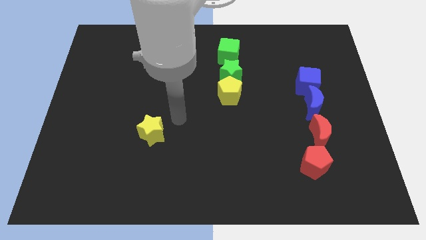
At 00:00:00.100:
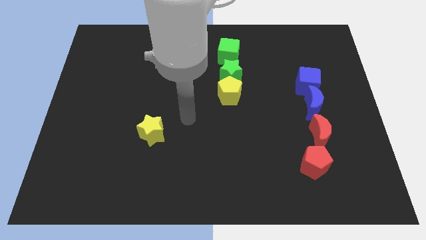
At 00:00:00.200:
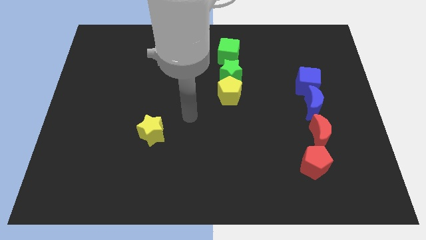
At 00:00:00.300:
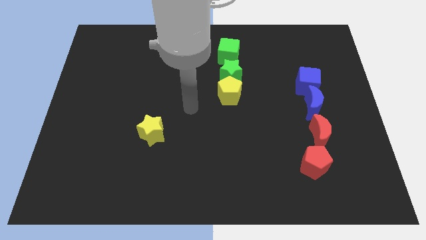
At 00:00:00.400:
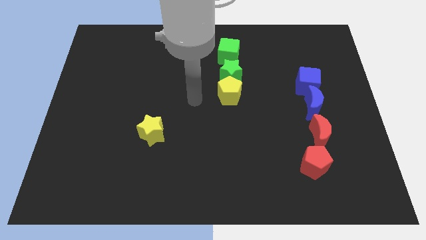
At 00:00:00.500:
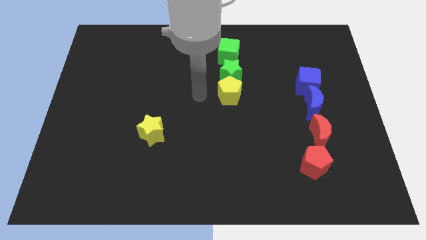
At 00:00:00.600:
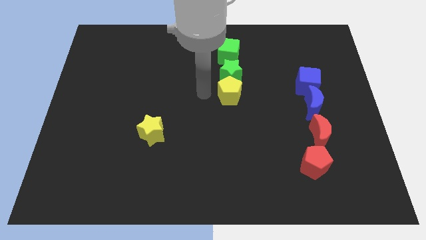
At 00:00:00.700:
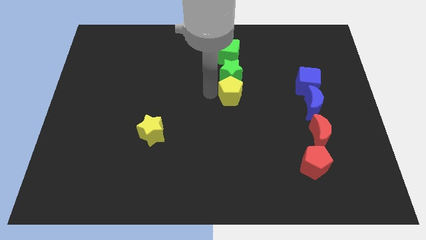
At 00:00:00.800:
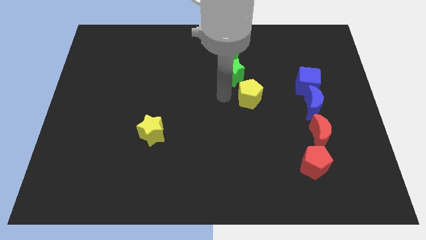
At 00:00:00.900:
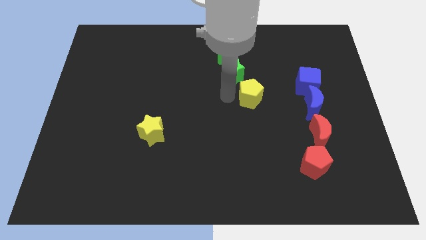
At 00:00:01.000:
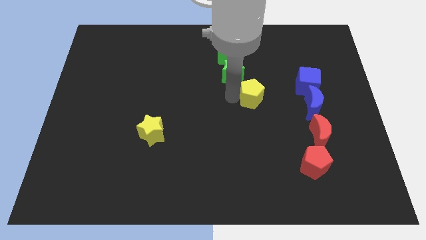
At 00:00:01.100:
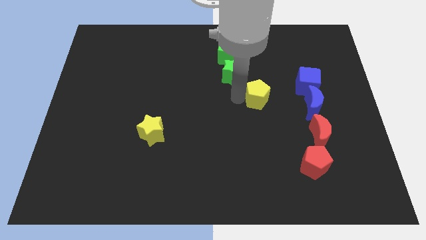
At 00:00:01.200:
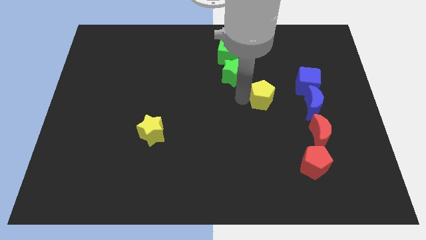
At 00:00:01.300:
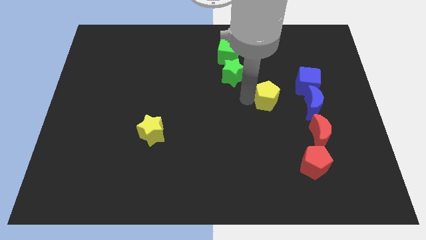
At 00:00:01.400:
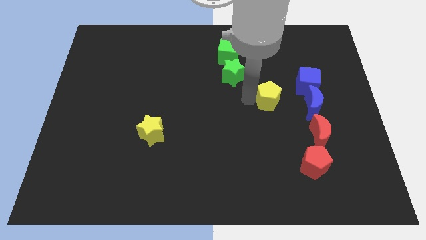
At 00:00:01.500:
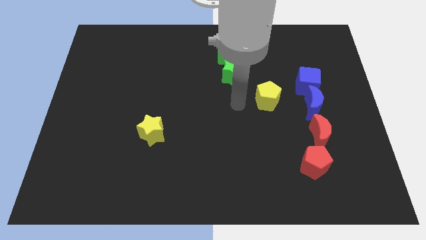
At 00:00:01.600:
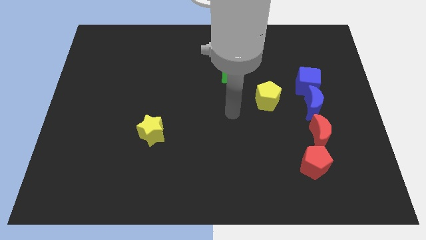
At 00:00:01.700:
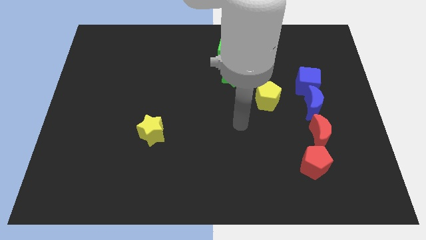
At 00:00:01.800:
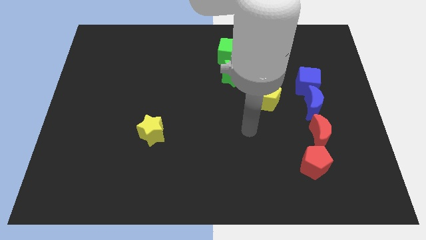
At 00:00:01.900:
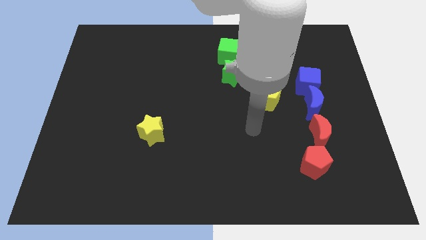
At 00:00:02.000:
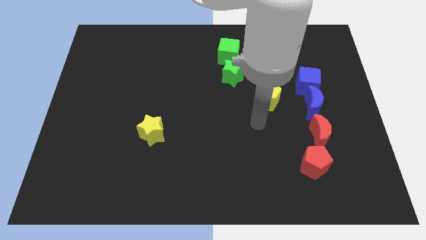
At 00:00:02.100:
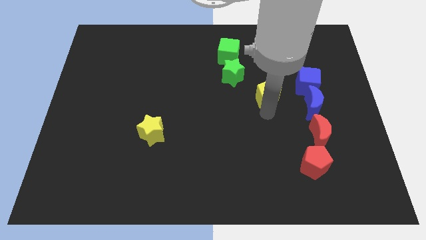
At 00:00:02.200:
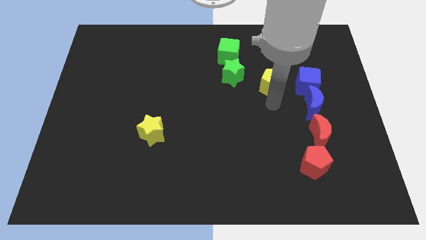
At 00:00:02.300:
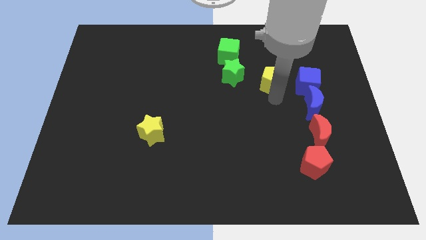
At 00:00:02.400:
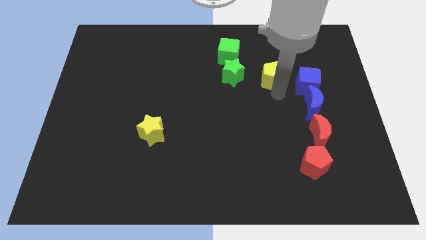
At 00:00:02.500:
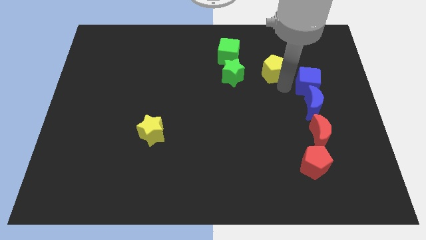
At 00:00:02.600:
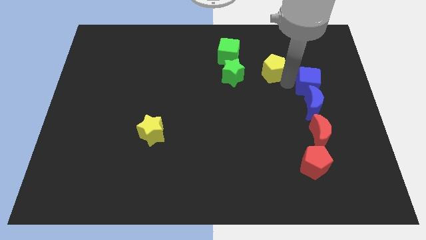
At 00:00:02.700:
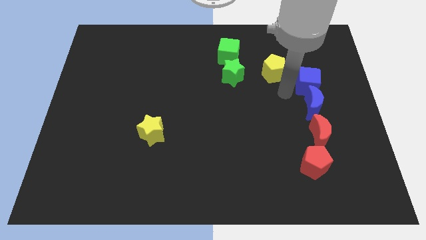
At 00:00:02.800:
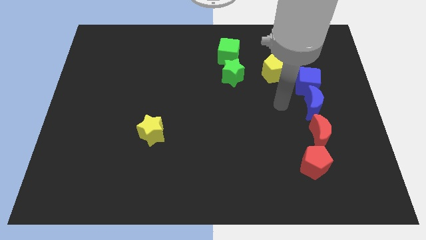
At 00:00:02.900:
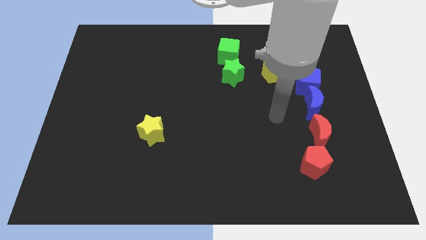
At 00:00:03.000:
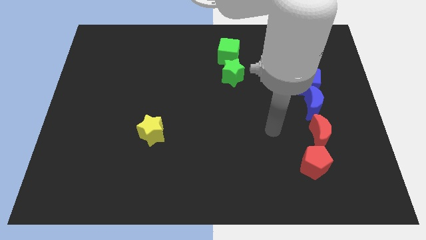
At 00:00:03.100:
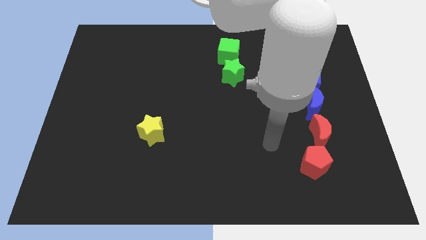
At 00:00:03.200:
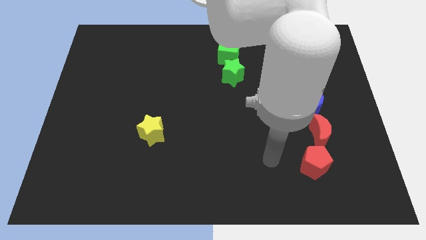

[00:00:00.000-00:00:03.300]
place yellow pentagon in between blue cube and green star

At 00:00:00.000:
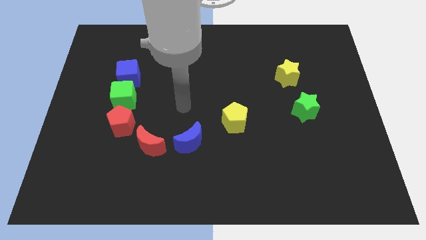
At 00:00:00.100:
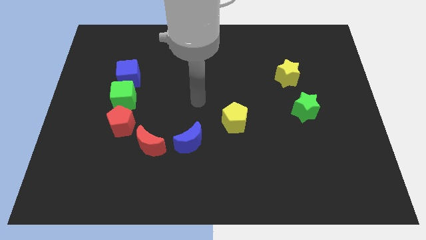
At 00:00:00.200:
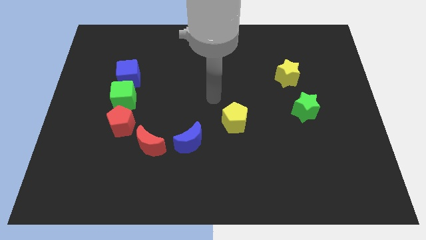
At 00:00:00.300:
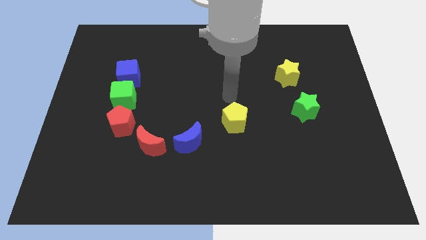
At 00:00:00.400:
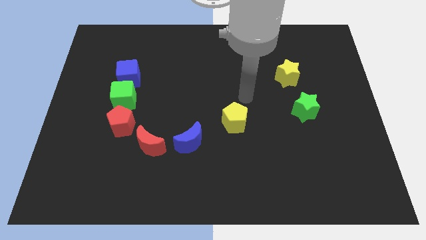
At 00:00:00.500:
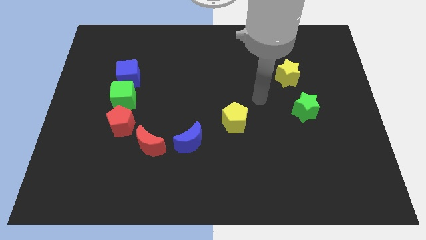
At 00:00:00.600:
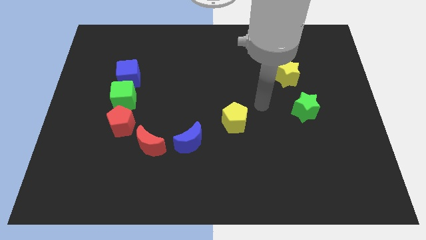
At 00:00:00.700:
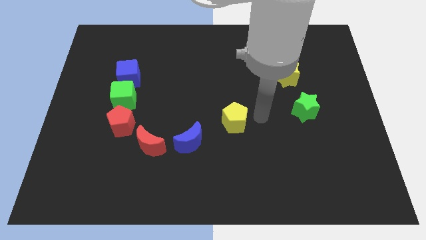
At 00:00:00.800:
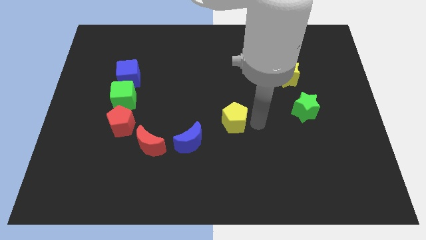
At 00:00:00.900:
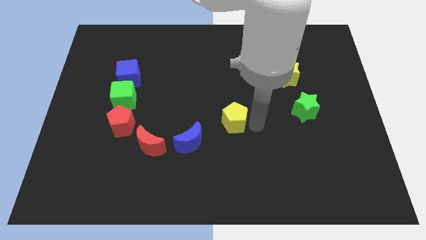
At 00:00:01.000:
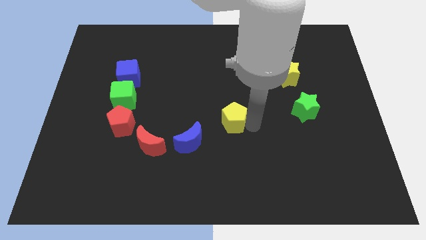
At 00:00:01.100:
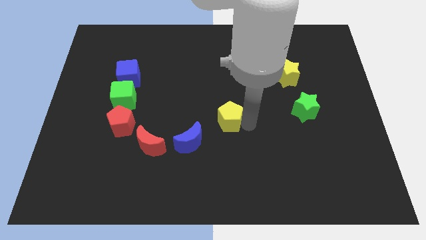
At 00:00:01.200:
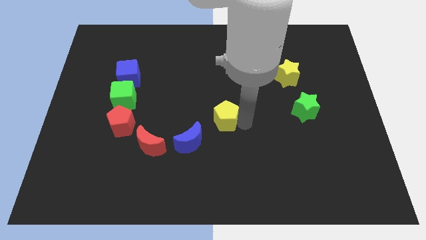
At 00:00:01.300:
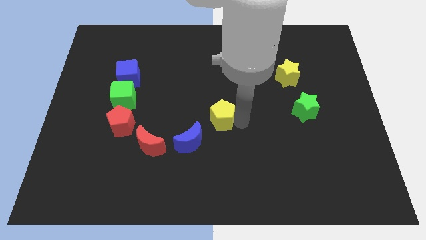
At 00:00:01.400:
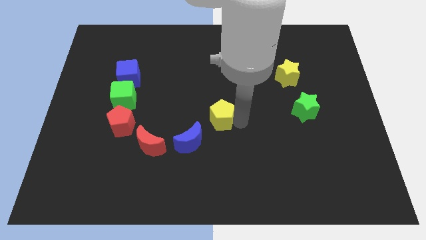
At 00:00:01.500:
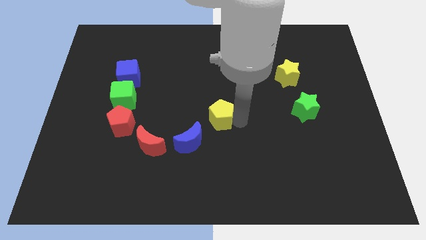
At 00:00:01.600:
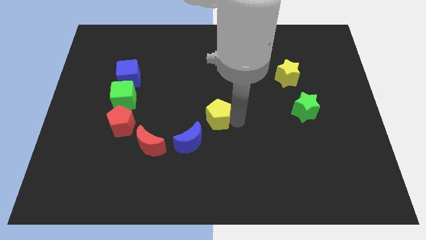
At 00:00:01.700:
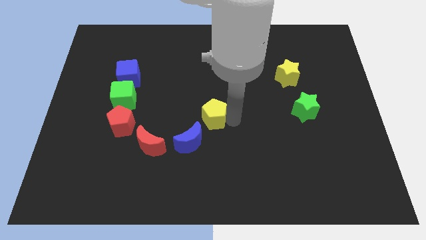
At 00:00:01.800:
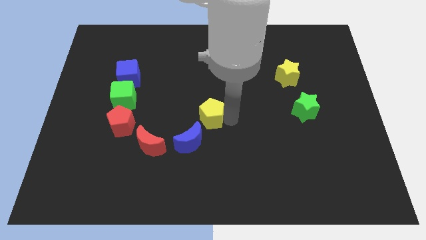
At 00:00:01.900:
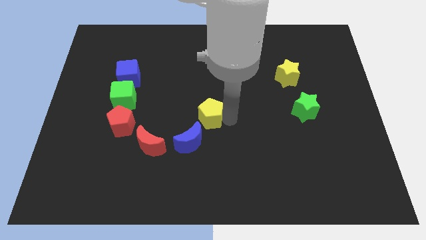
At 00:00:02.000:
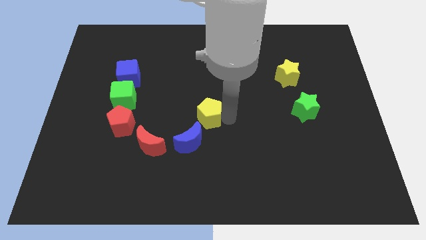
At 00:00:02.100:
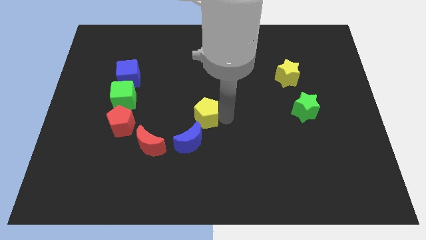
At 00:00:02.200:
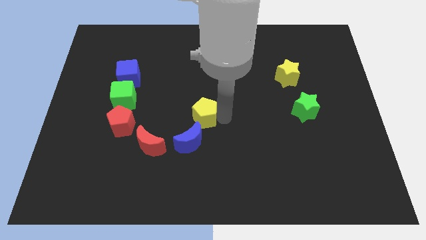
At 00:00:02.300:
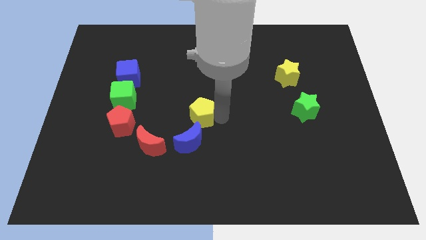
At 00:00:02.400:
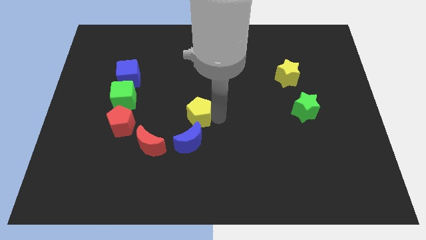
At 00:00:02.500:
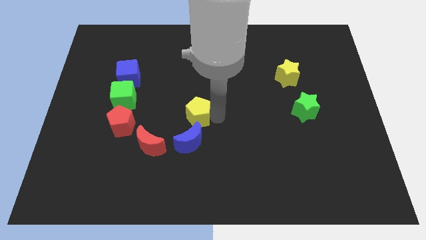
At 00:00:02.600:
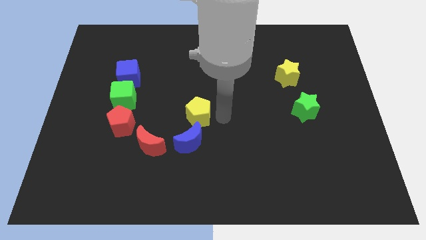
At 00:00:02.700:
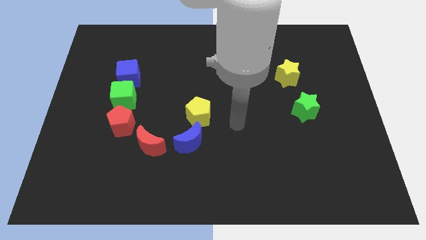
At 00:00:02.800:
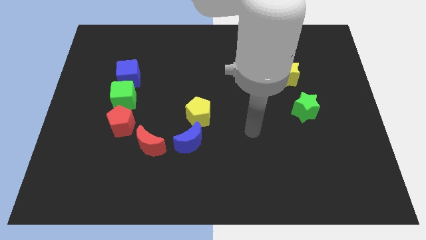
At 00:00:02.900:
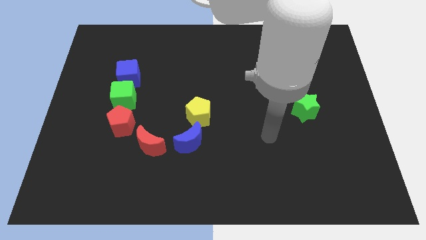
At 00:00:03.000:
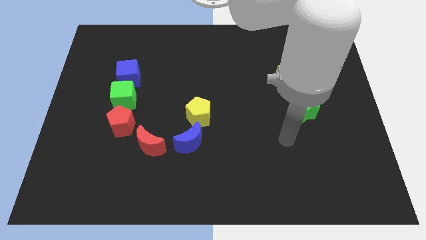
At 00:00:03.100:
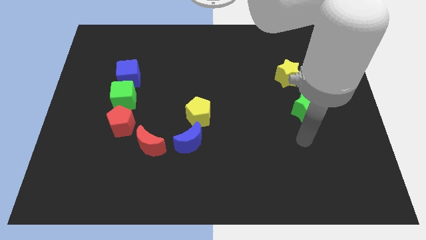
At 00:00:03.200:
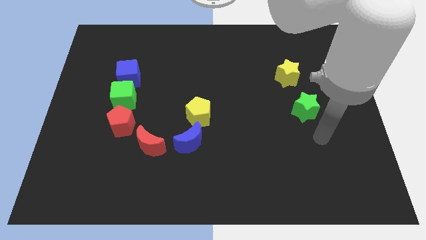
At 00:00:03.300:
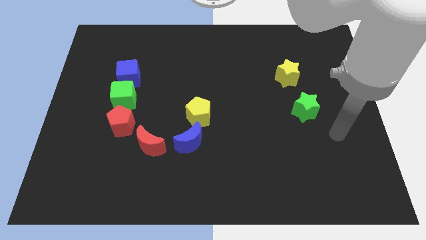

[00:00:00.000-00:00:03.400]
move the yellow pentagon above the blue moon

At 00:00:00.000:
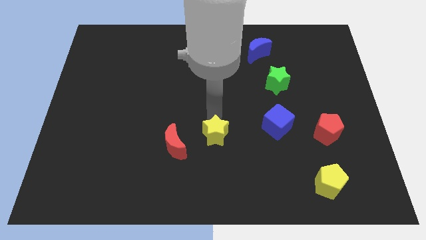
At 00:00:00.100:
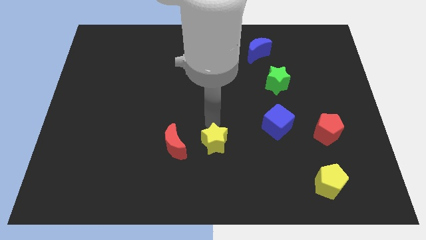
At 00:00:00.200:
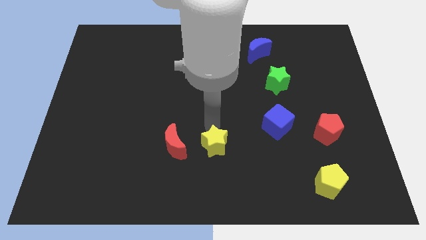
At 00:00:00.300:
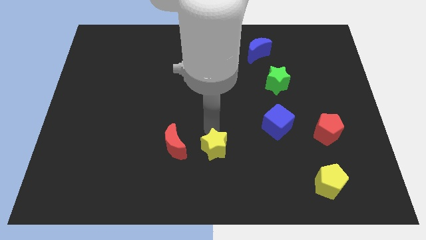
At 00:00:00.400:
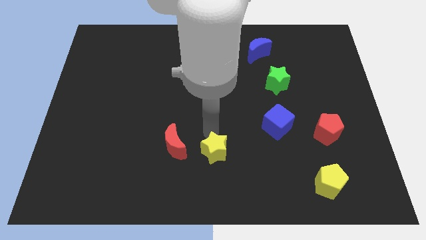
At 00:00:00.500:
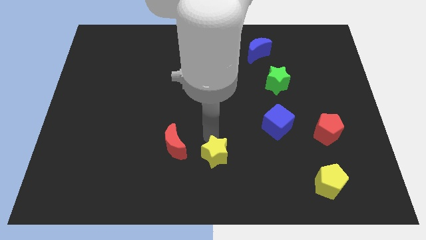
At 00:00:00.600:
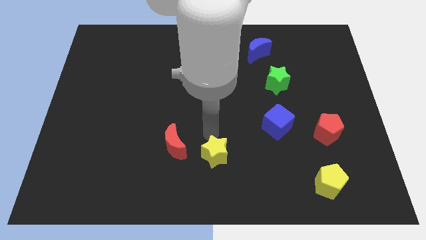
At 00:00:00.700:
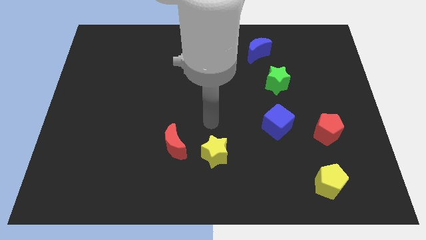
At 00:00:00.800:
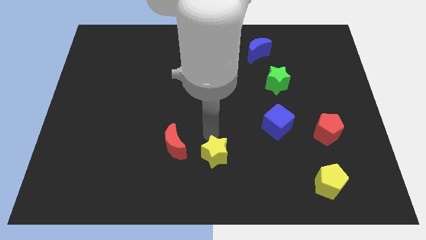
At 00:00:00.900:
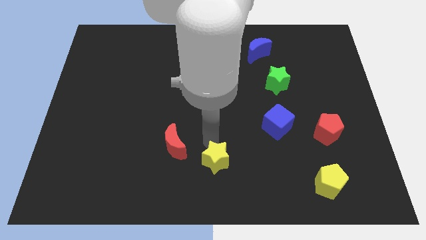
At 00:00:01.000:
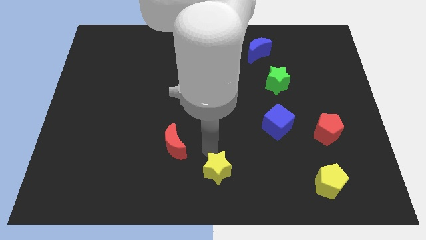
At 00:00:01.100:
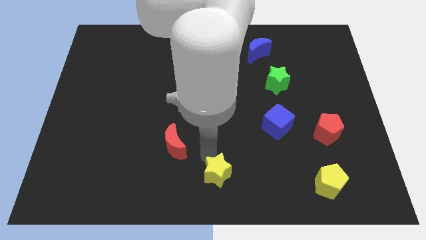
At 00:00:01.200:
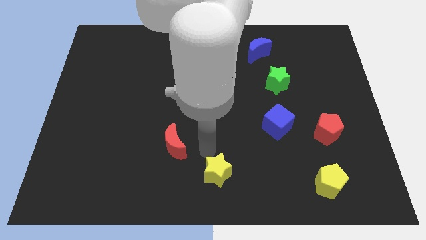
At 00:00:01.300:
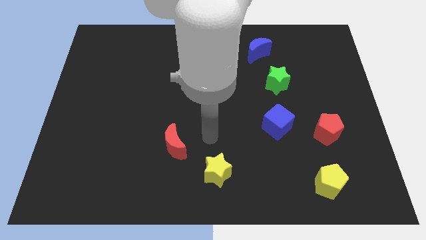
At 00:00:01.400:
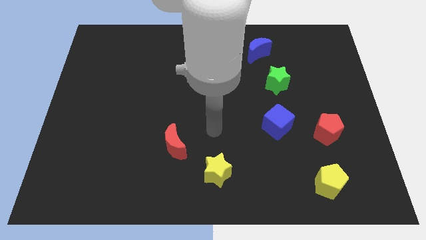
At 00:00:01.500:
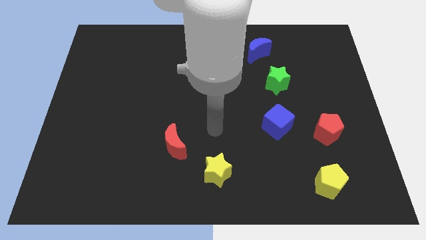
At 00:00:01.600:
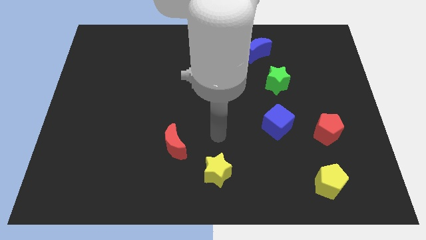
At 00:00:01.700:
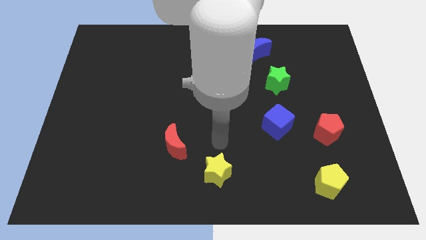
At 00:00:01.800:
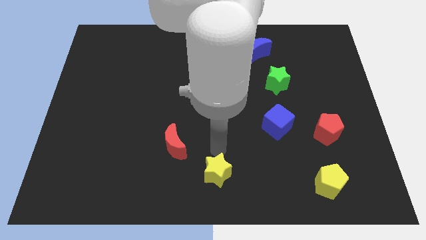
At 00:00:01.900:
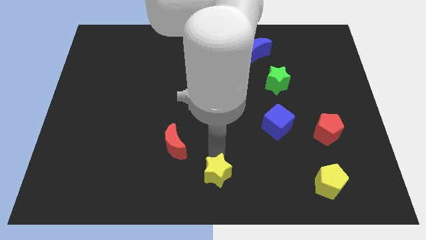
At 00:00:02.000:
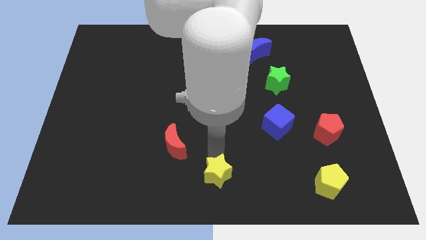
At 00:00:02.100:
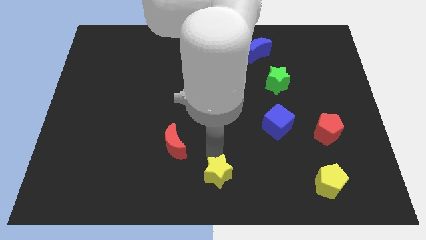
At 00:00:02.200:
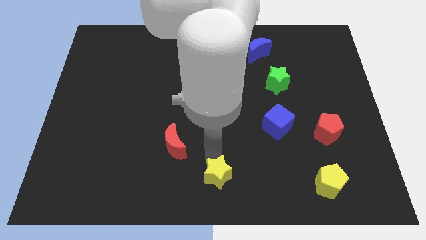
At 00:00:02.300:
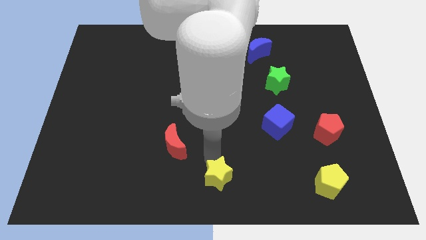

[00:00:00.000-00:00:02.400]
push the yellow star slightly to the bottom
